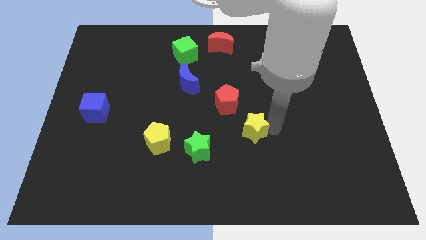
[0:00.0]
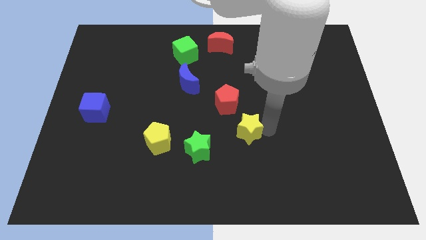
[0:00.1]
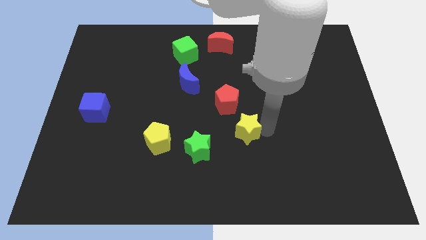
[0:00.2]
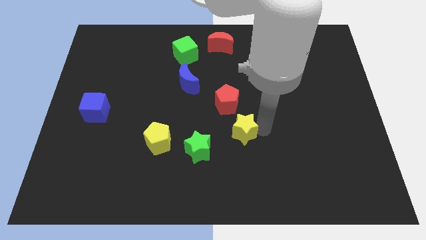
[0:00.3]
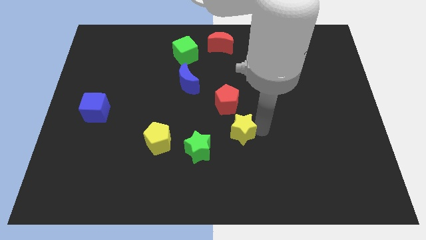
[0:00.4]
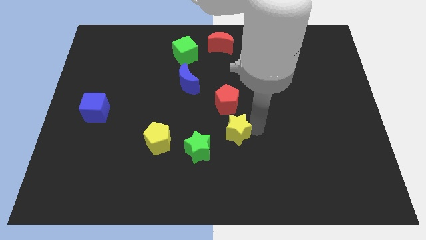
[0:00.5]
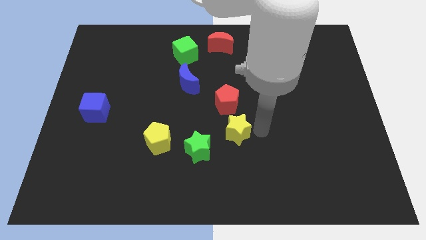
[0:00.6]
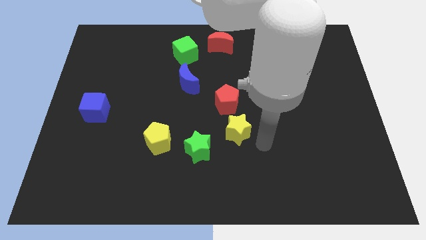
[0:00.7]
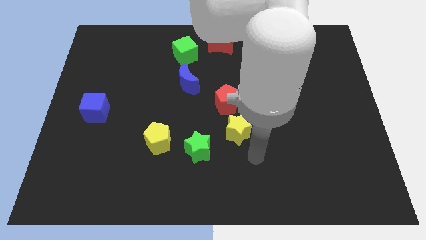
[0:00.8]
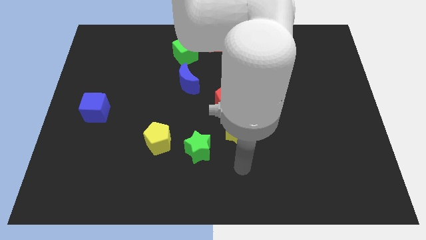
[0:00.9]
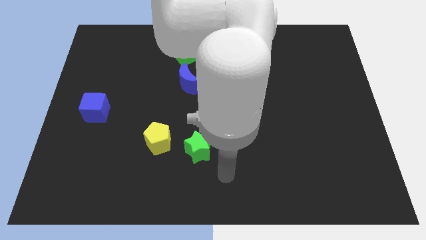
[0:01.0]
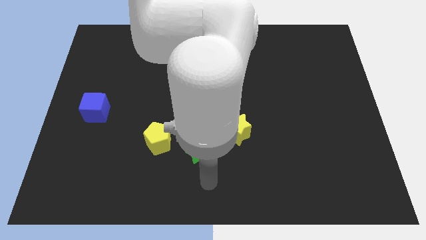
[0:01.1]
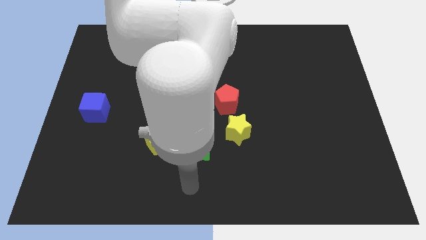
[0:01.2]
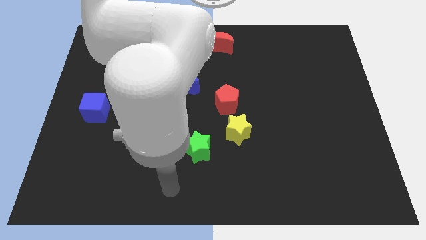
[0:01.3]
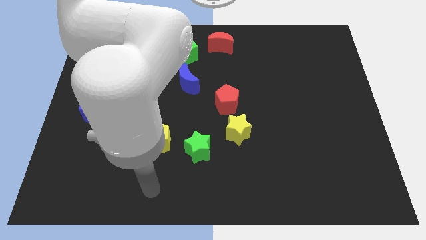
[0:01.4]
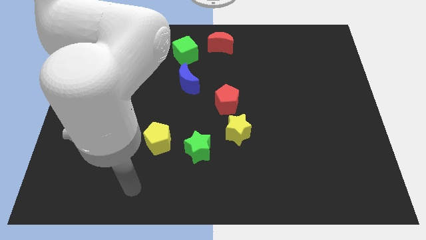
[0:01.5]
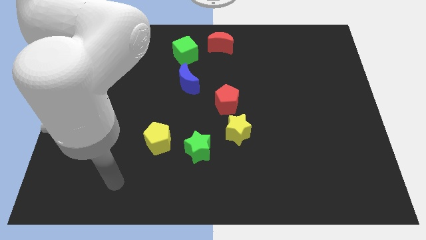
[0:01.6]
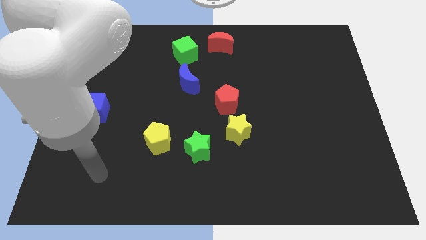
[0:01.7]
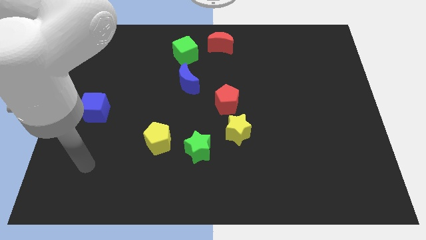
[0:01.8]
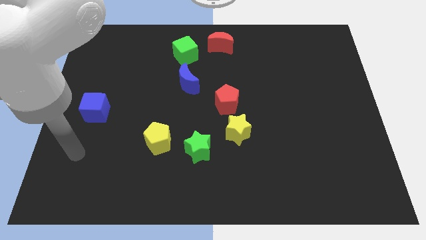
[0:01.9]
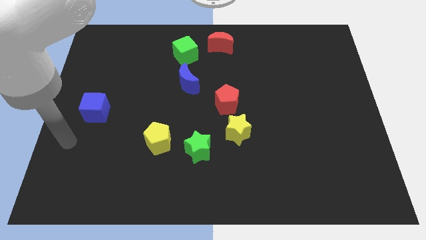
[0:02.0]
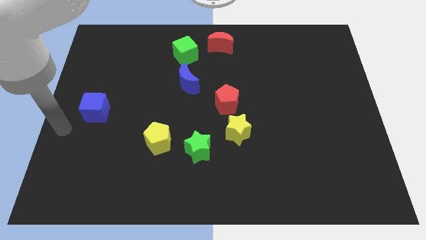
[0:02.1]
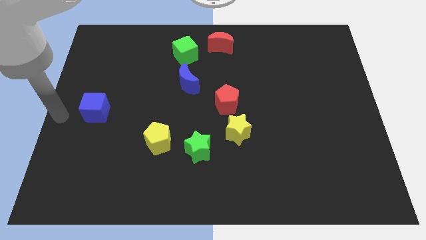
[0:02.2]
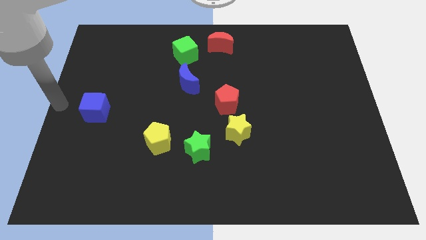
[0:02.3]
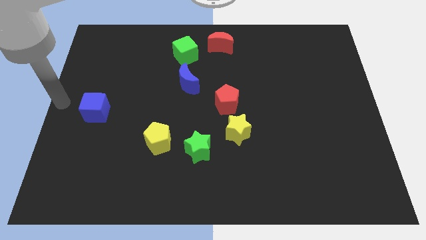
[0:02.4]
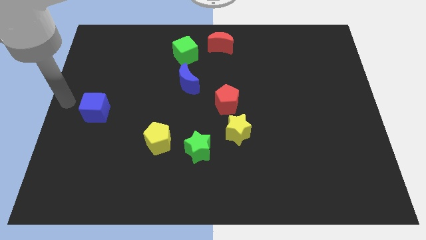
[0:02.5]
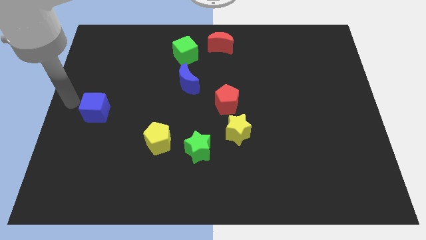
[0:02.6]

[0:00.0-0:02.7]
move the arm towards the left of the blue cube

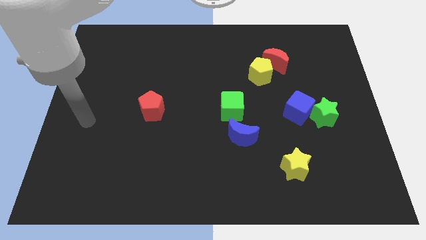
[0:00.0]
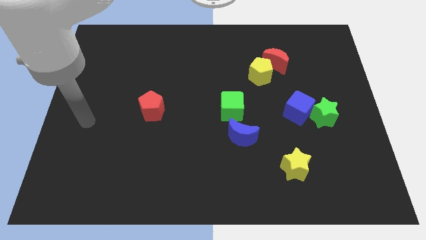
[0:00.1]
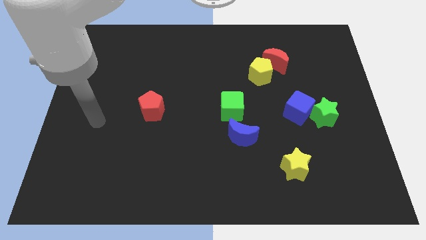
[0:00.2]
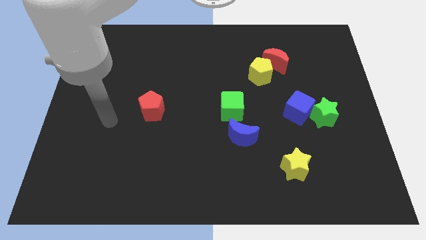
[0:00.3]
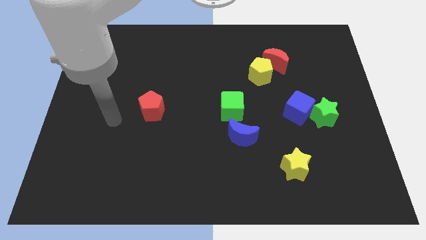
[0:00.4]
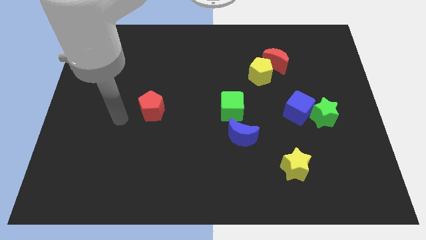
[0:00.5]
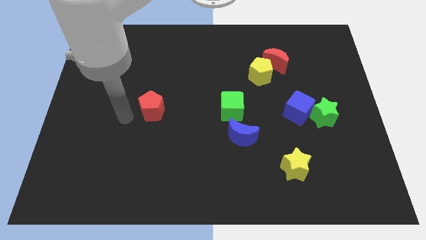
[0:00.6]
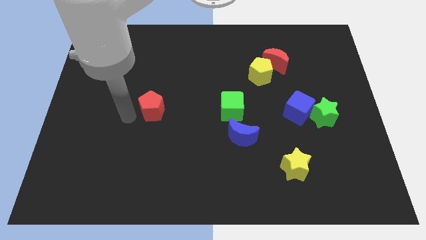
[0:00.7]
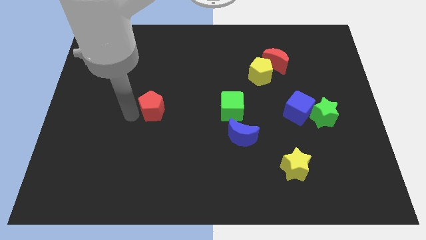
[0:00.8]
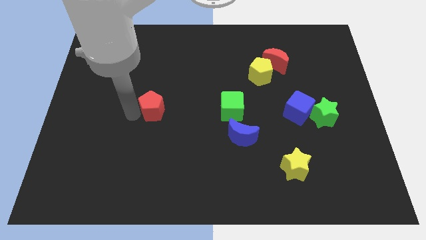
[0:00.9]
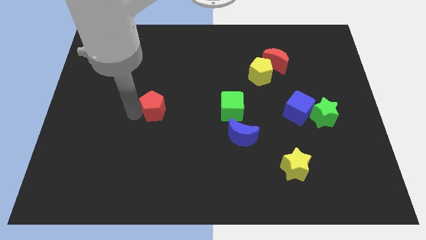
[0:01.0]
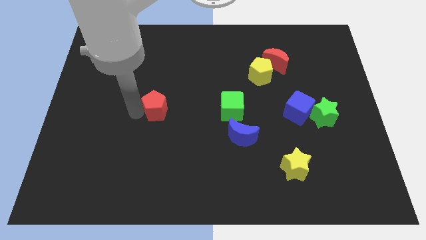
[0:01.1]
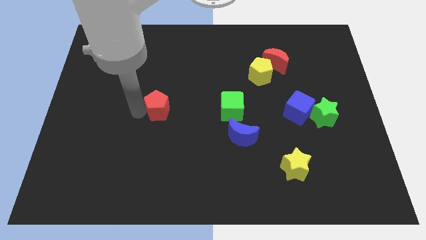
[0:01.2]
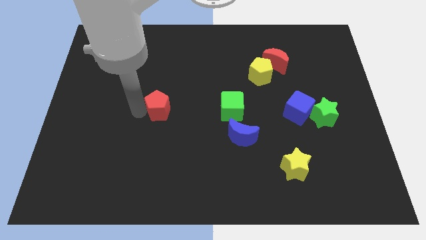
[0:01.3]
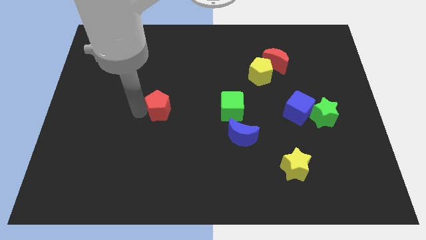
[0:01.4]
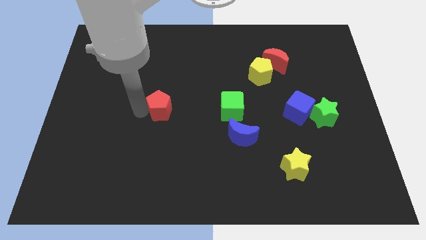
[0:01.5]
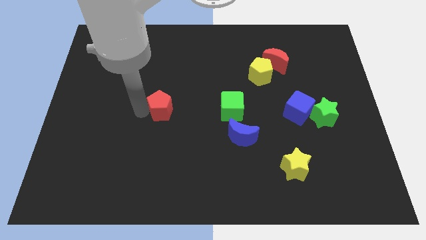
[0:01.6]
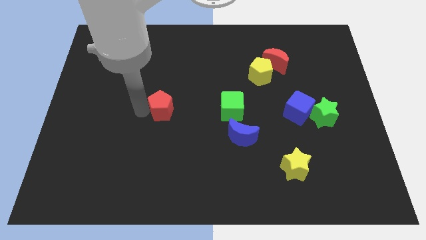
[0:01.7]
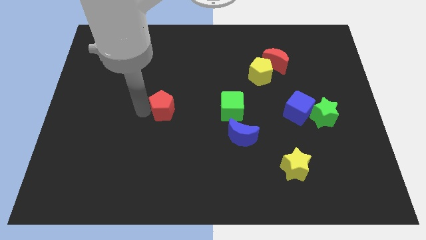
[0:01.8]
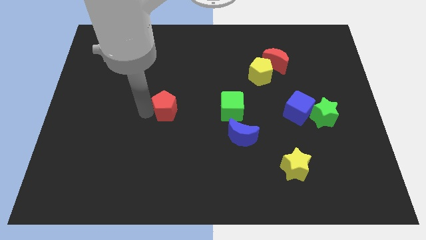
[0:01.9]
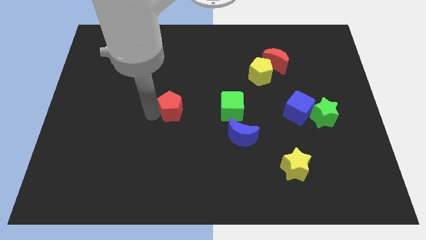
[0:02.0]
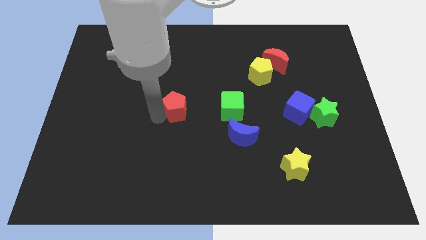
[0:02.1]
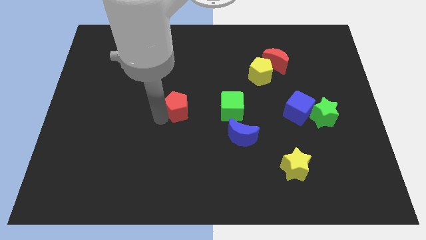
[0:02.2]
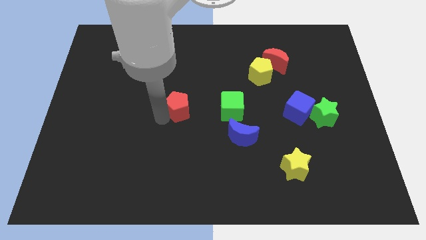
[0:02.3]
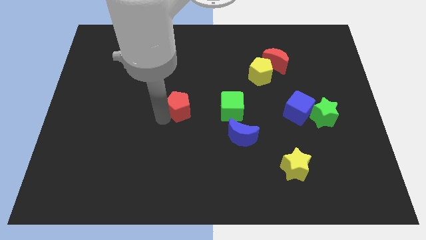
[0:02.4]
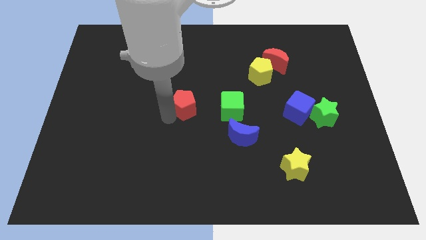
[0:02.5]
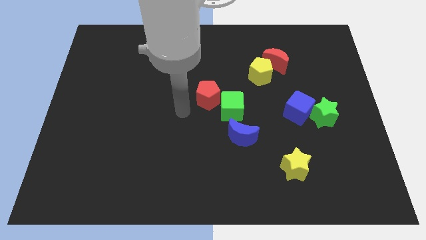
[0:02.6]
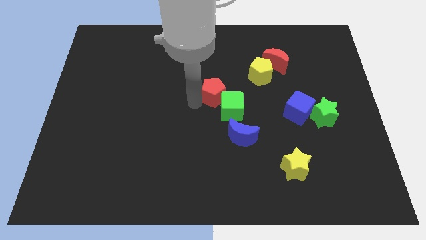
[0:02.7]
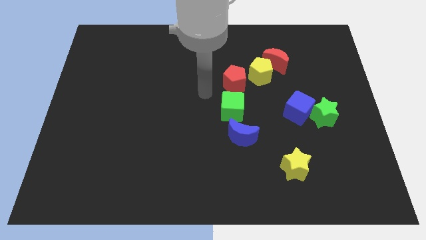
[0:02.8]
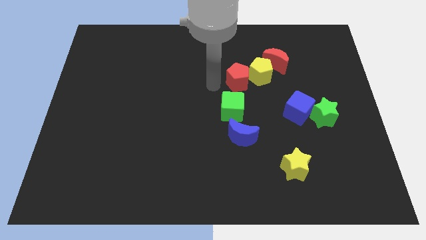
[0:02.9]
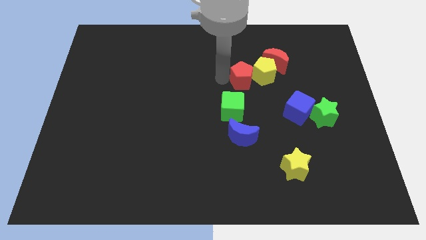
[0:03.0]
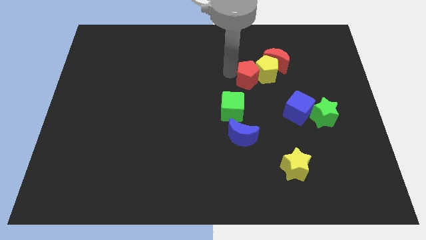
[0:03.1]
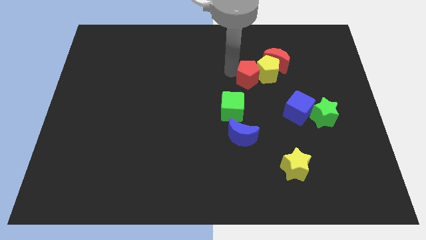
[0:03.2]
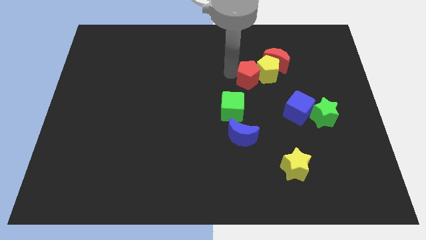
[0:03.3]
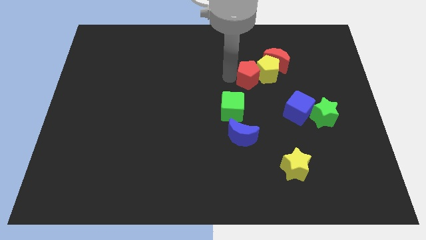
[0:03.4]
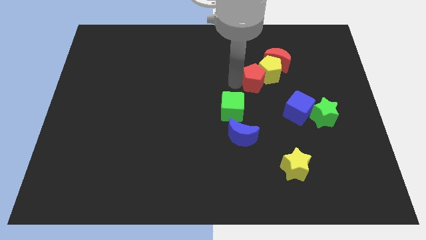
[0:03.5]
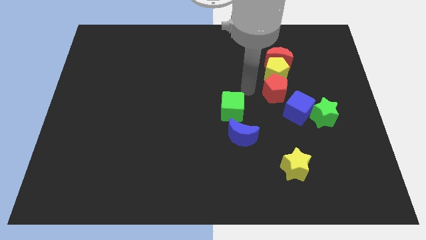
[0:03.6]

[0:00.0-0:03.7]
move the red pentagon into the yellow pentagon

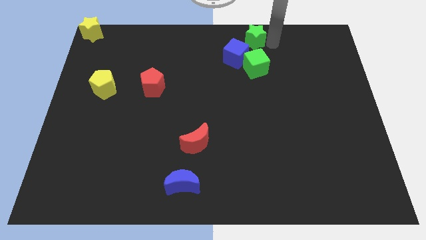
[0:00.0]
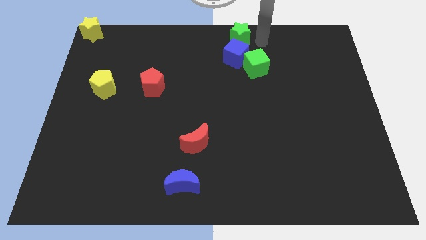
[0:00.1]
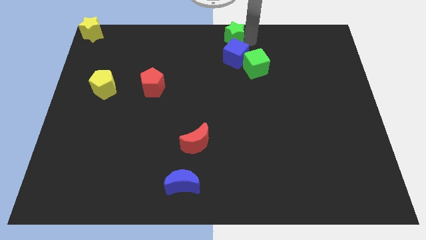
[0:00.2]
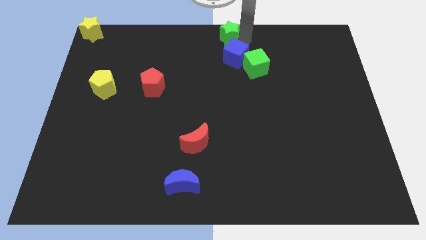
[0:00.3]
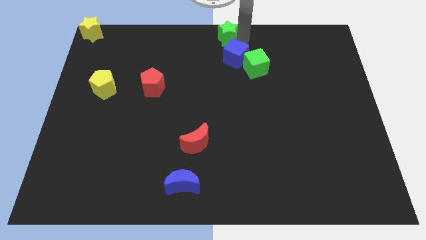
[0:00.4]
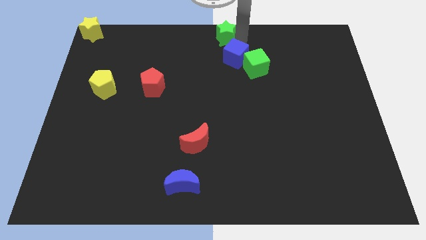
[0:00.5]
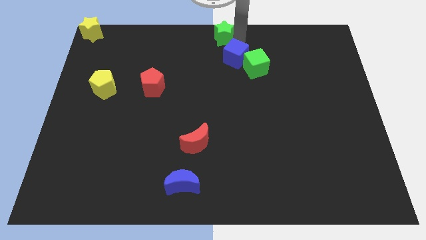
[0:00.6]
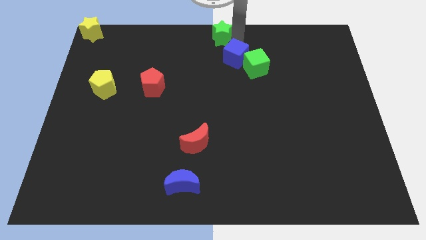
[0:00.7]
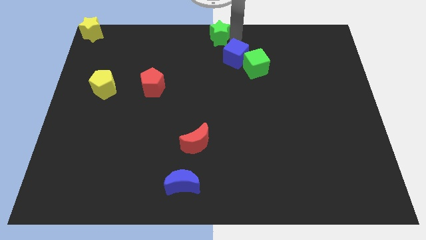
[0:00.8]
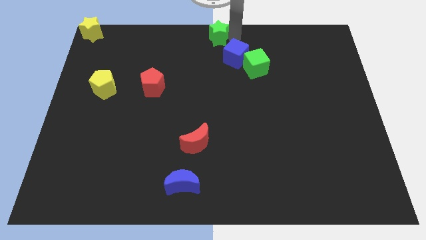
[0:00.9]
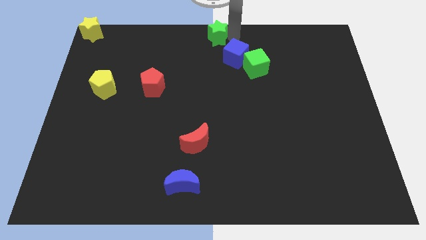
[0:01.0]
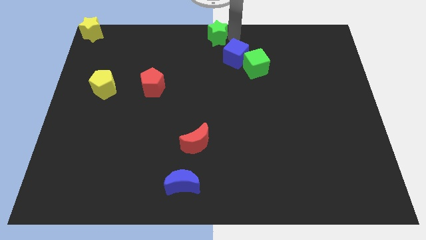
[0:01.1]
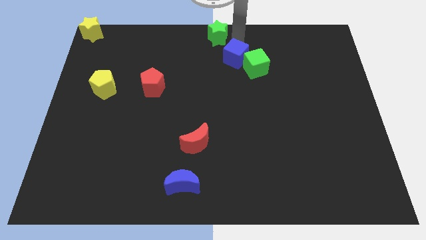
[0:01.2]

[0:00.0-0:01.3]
move the green star at the top left of the blue cube

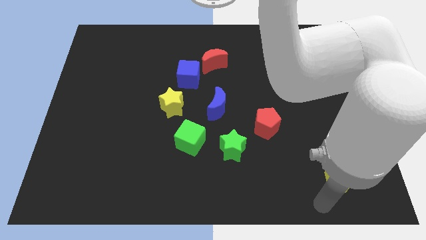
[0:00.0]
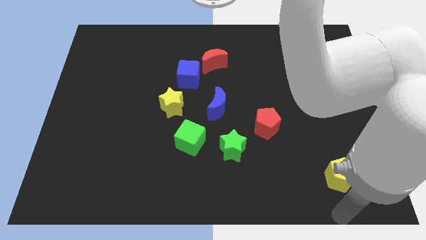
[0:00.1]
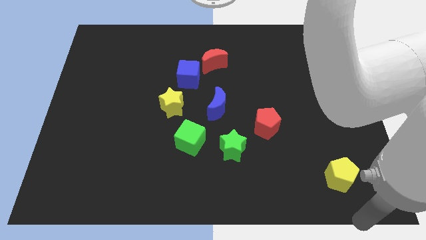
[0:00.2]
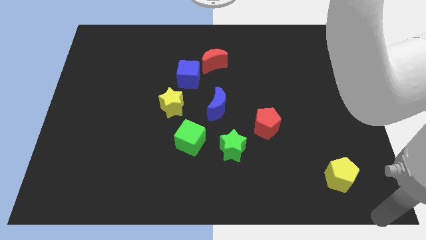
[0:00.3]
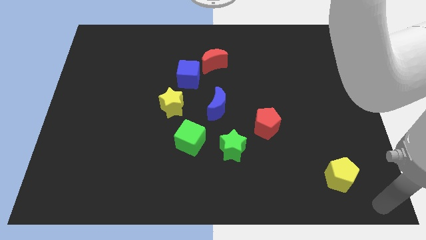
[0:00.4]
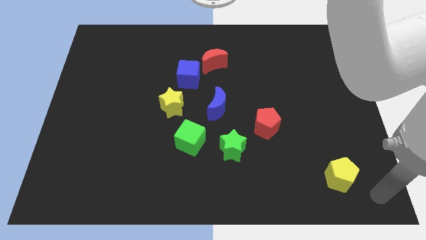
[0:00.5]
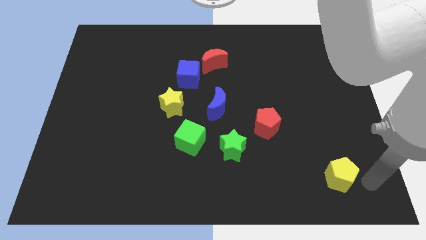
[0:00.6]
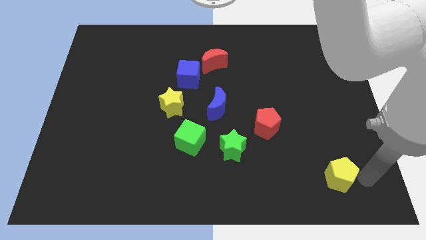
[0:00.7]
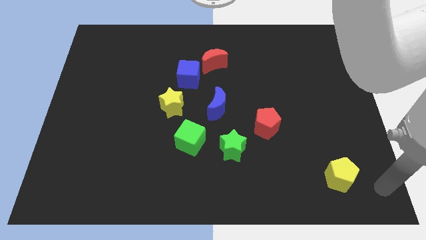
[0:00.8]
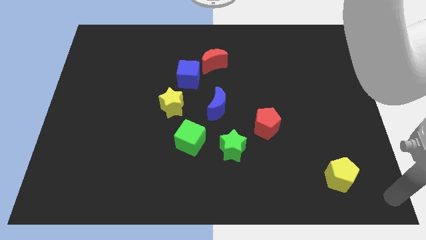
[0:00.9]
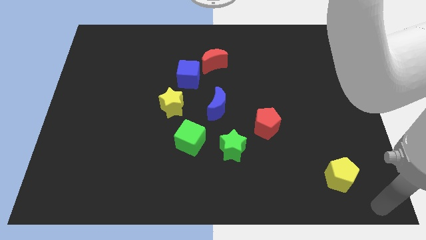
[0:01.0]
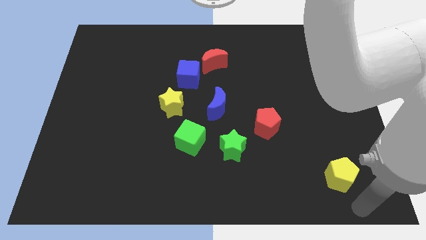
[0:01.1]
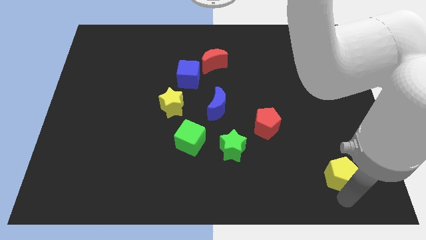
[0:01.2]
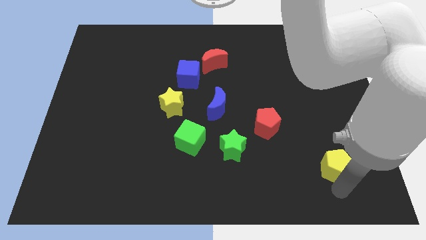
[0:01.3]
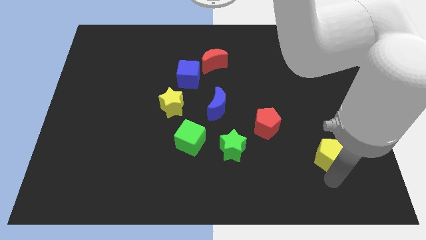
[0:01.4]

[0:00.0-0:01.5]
move your arm towards the yellow pentagon

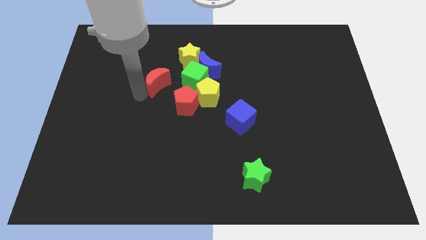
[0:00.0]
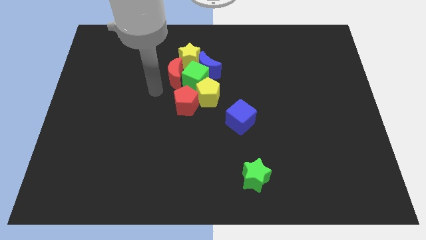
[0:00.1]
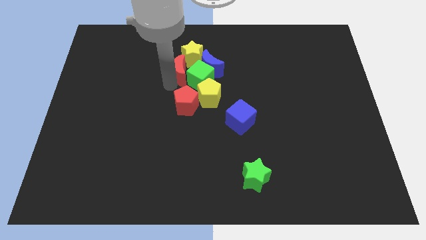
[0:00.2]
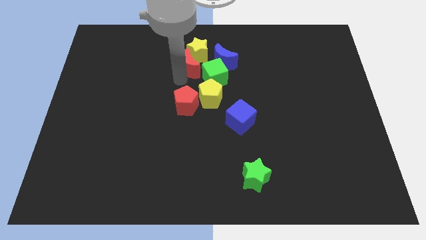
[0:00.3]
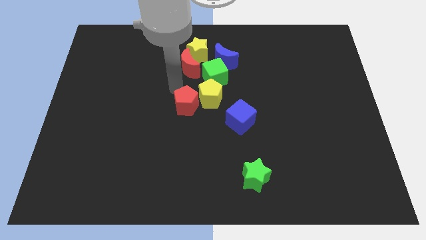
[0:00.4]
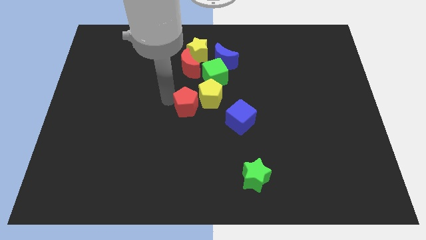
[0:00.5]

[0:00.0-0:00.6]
push the red moon into the green and yellow block
